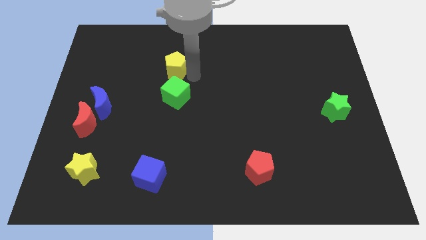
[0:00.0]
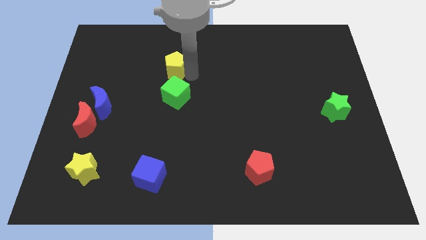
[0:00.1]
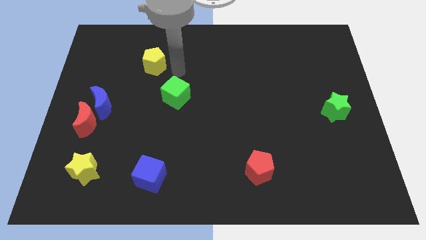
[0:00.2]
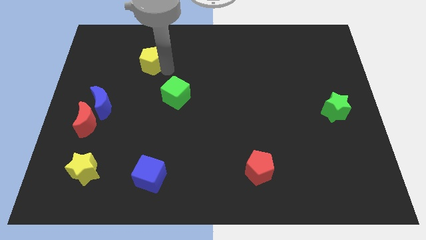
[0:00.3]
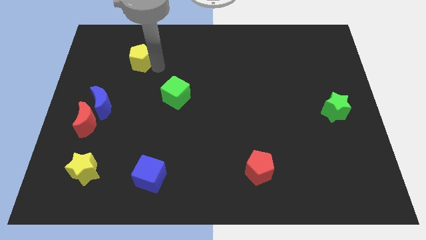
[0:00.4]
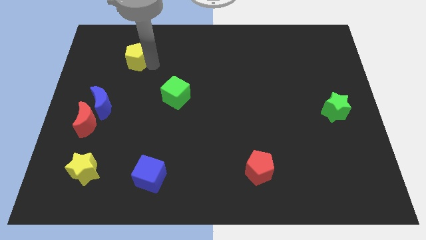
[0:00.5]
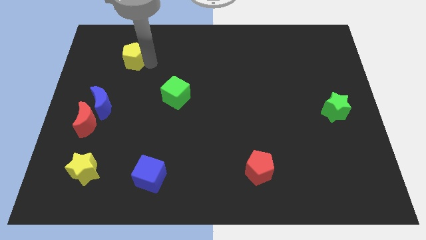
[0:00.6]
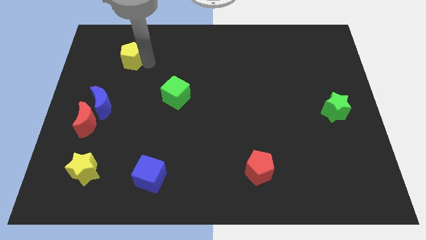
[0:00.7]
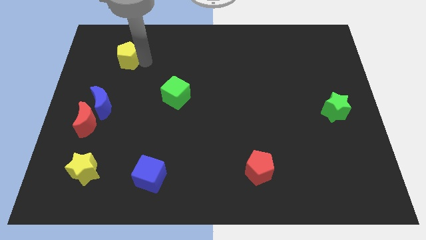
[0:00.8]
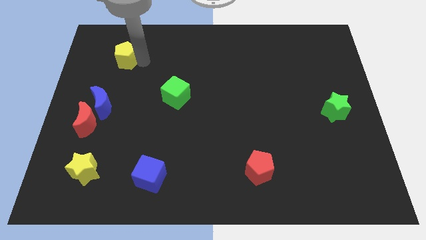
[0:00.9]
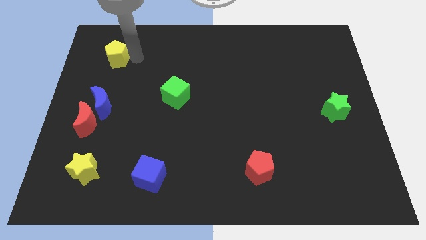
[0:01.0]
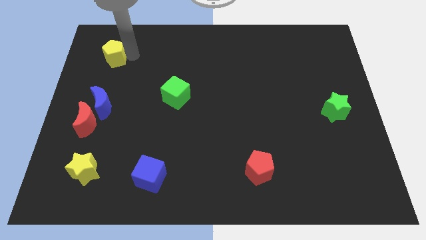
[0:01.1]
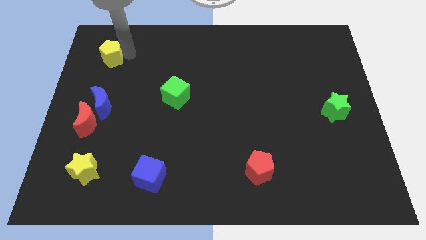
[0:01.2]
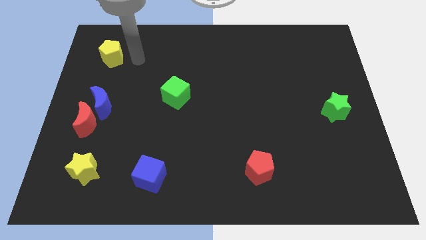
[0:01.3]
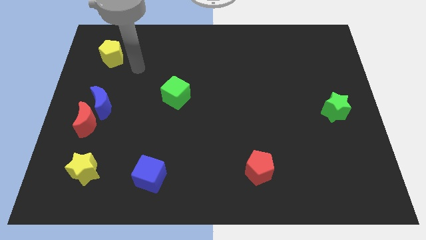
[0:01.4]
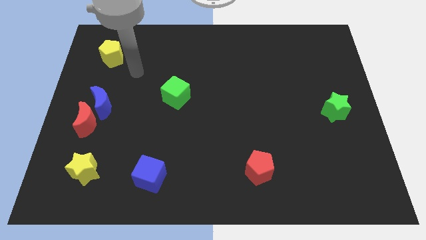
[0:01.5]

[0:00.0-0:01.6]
move the yellow pentagon vertically above the blue crescent

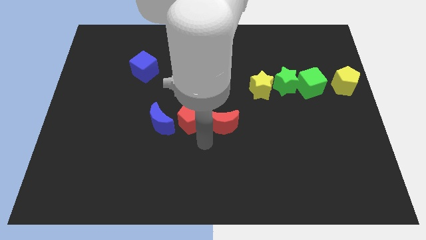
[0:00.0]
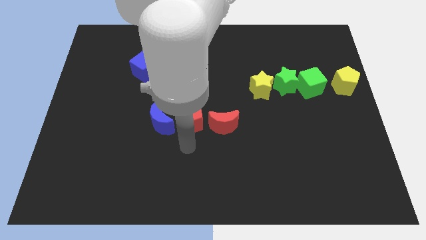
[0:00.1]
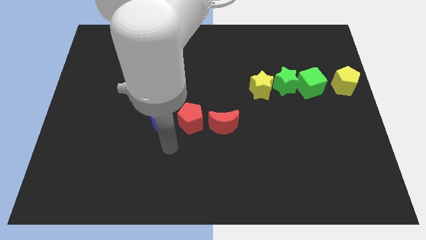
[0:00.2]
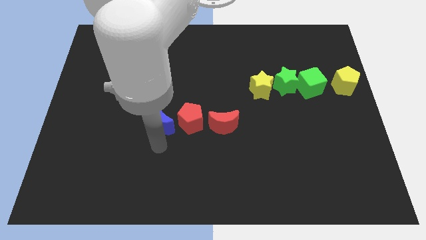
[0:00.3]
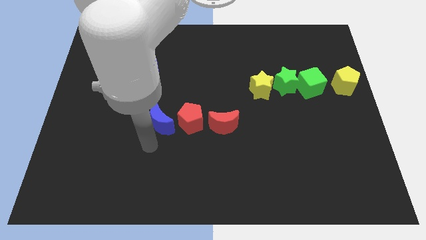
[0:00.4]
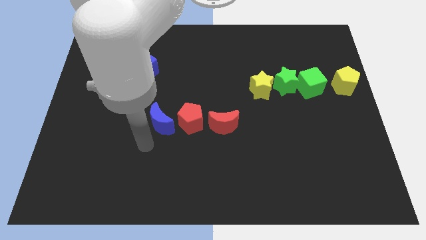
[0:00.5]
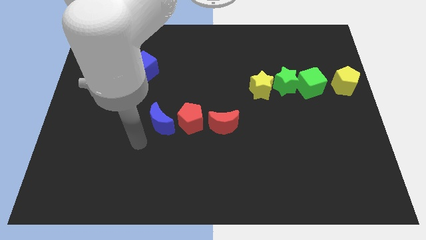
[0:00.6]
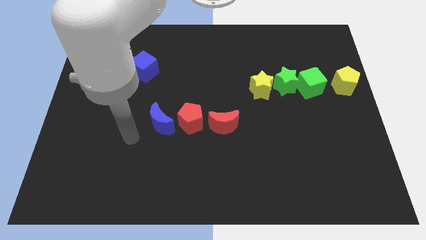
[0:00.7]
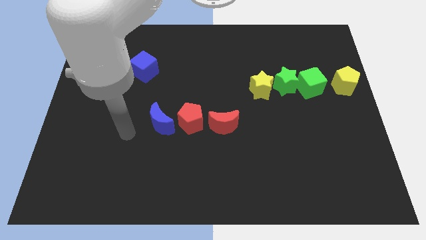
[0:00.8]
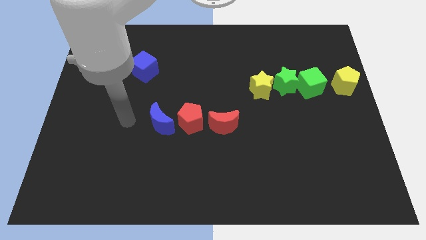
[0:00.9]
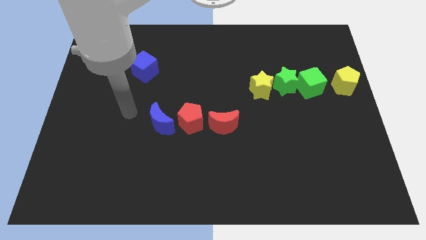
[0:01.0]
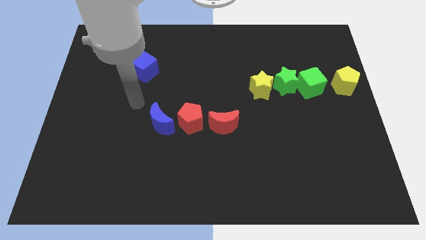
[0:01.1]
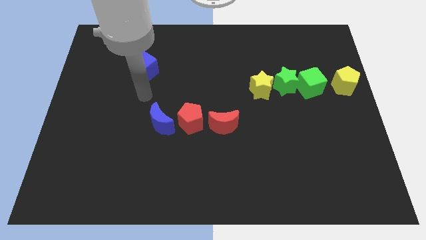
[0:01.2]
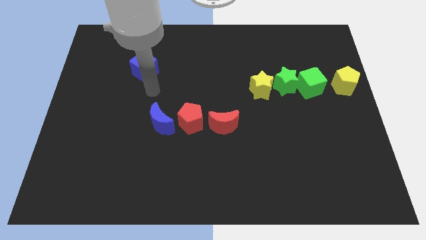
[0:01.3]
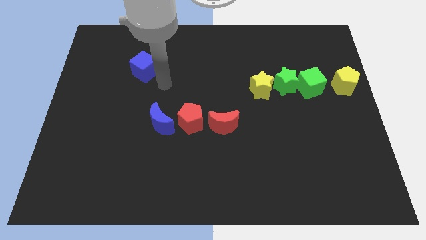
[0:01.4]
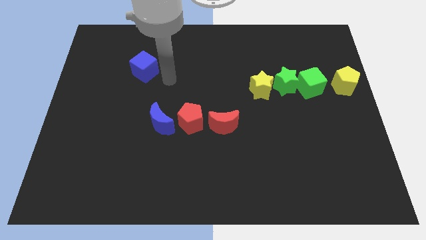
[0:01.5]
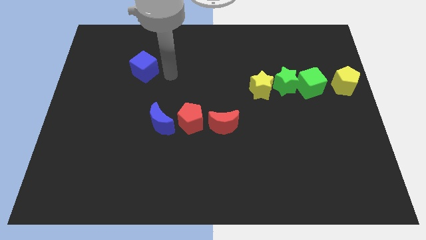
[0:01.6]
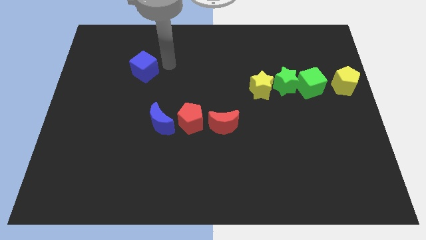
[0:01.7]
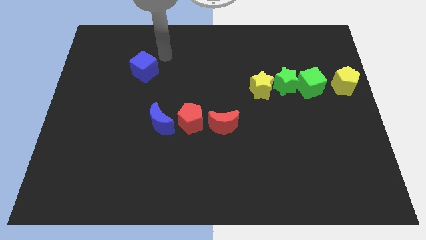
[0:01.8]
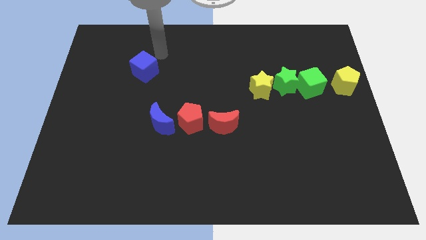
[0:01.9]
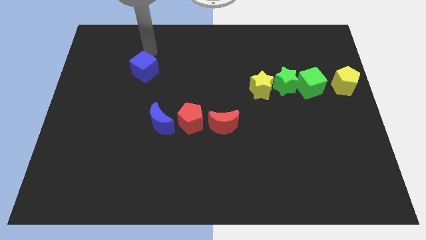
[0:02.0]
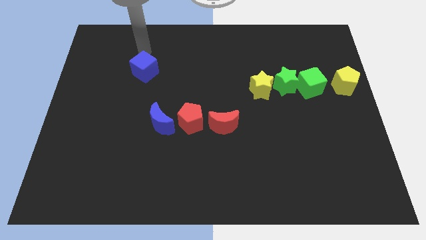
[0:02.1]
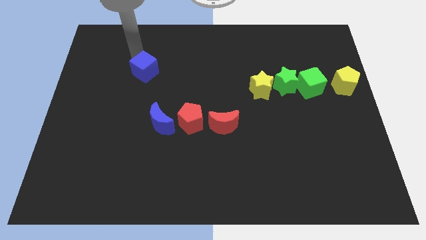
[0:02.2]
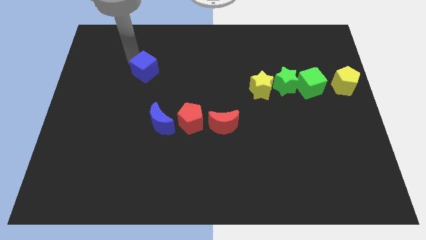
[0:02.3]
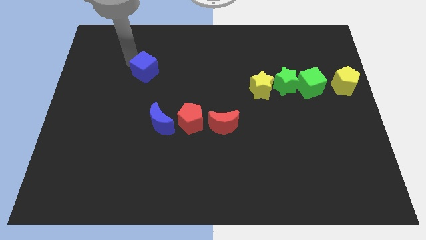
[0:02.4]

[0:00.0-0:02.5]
place the arm near the blue cube

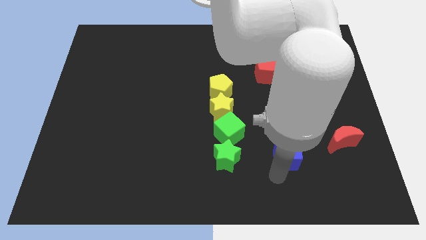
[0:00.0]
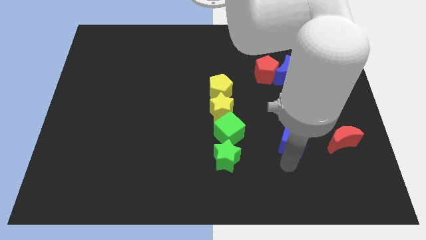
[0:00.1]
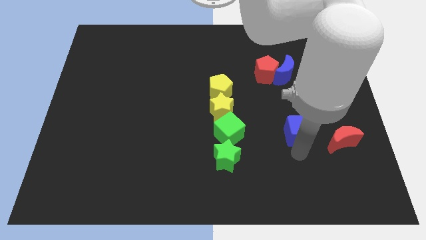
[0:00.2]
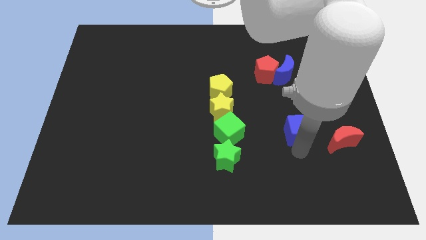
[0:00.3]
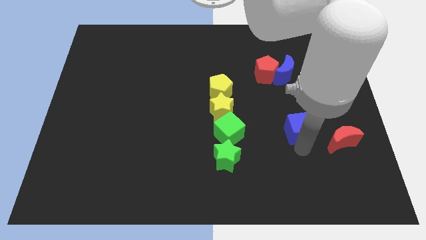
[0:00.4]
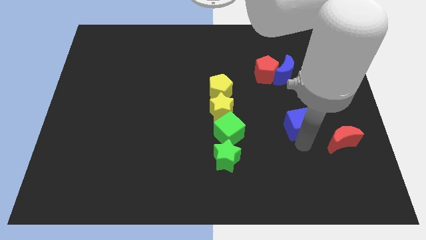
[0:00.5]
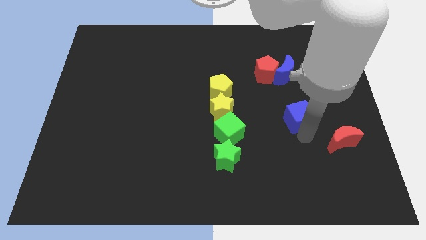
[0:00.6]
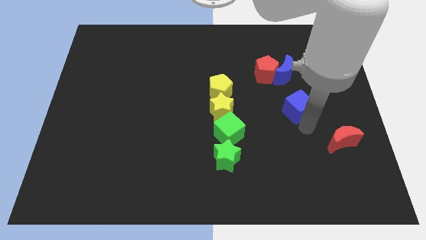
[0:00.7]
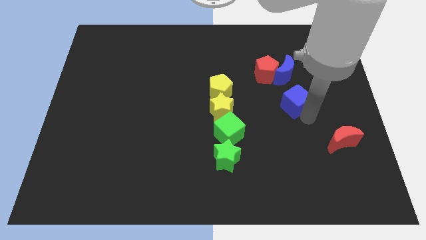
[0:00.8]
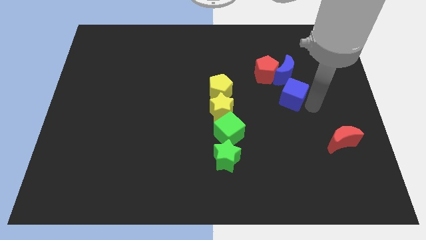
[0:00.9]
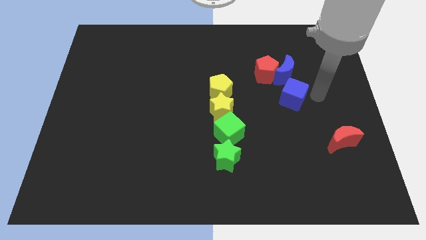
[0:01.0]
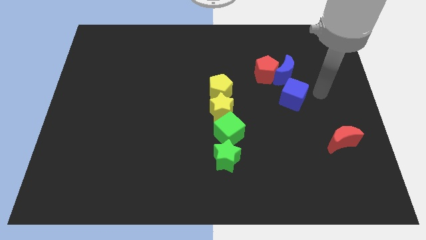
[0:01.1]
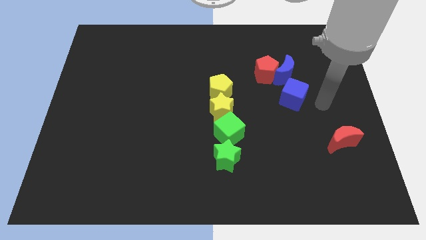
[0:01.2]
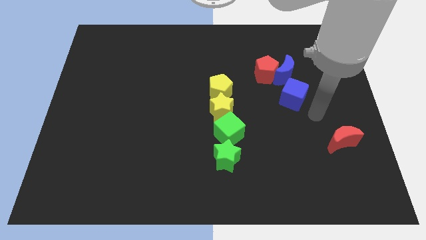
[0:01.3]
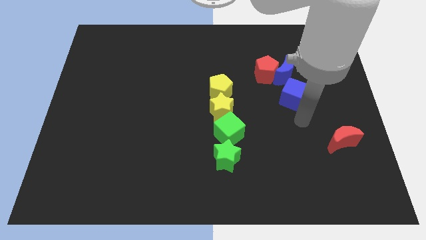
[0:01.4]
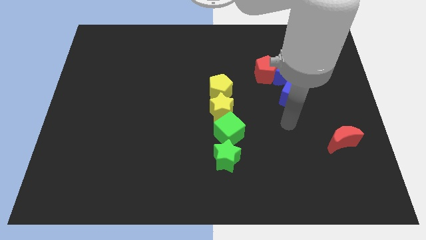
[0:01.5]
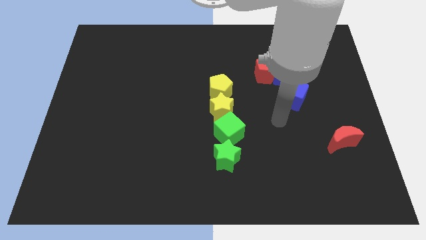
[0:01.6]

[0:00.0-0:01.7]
move the blue cube bottom to the blue crescent

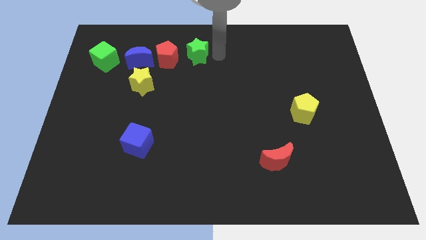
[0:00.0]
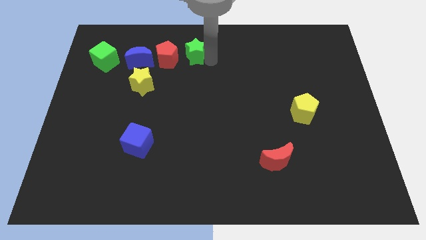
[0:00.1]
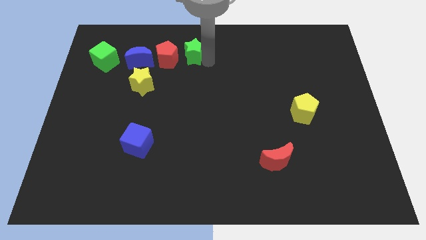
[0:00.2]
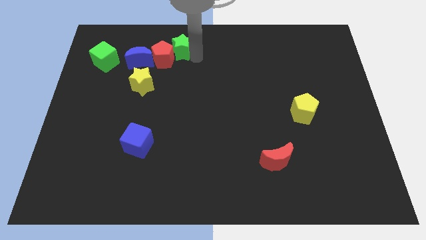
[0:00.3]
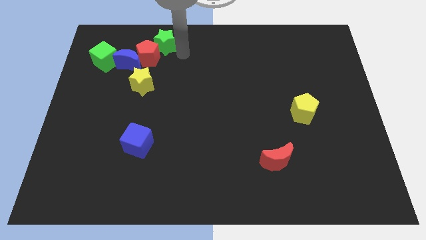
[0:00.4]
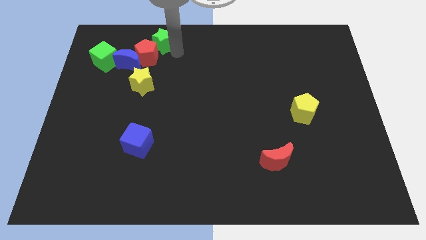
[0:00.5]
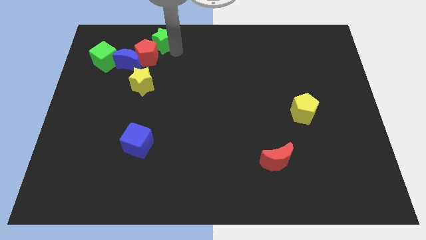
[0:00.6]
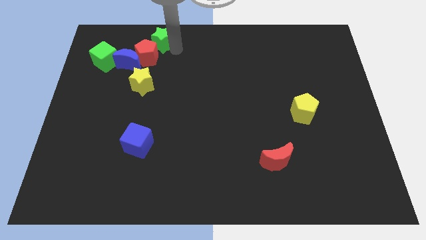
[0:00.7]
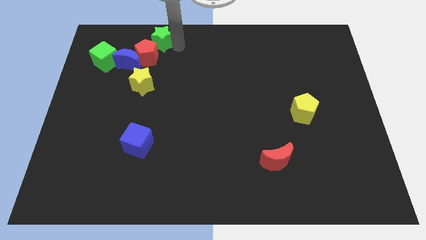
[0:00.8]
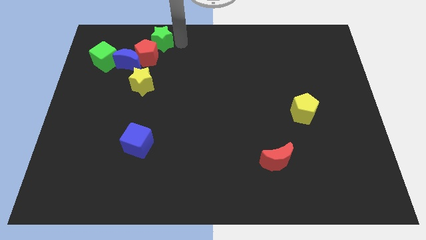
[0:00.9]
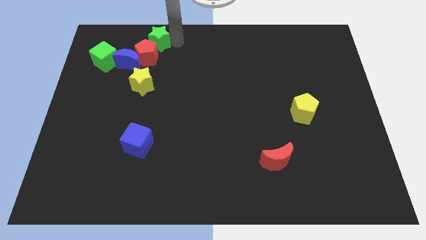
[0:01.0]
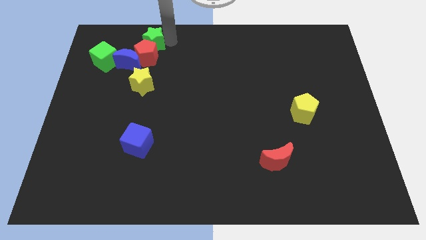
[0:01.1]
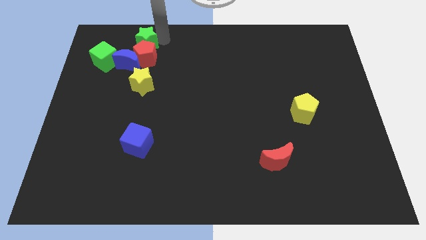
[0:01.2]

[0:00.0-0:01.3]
slide the green star vertically above the red pentagon

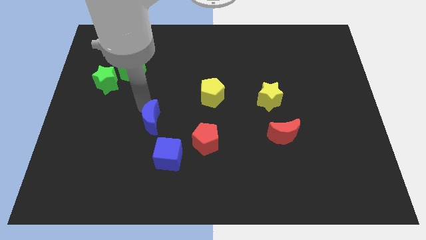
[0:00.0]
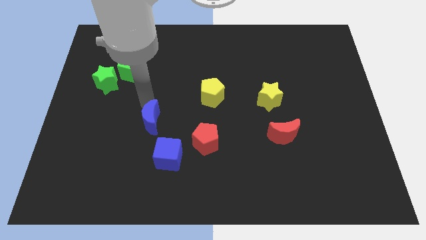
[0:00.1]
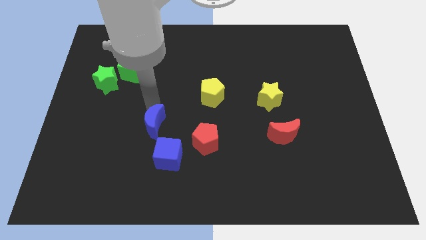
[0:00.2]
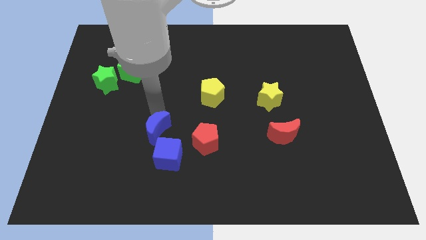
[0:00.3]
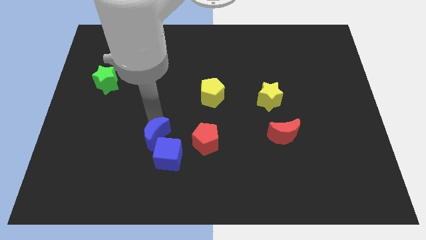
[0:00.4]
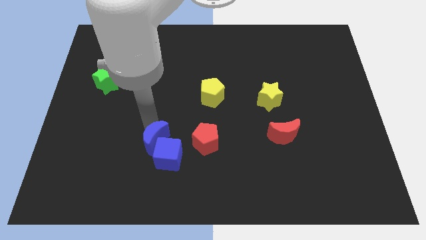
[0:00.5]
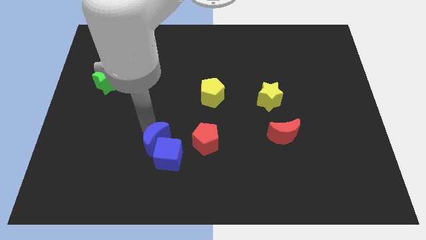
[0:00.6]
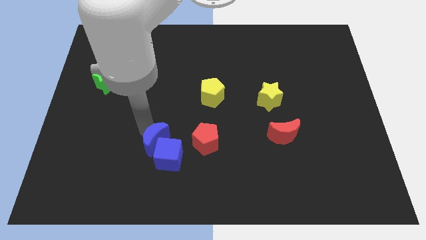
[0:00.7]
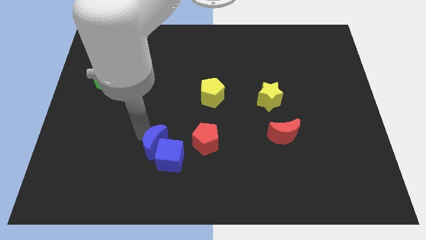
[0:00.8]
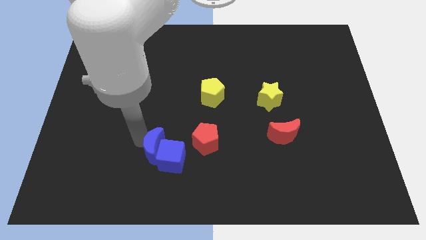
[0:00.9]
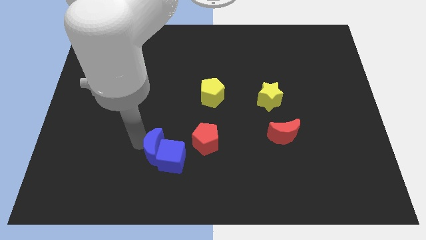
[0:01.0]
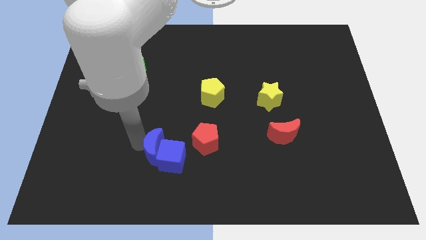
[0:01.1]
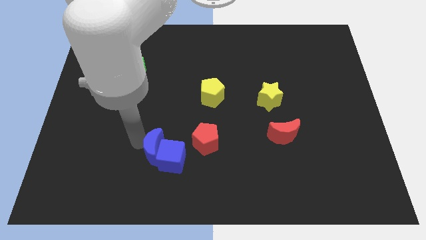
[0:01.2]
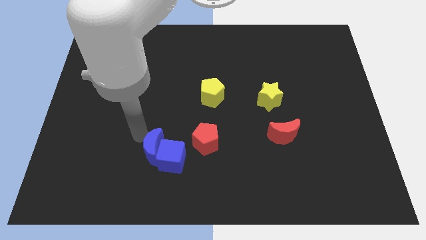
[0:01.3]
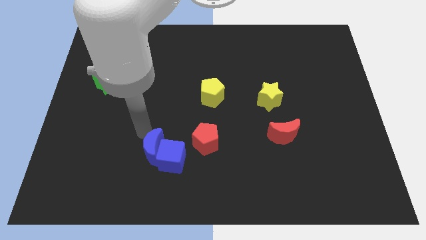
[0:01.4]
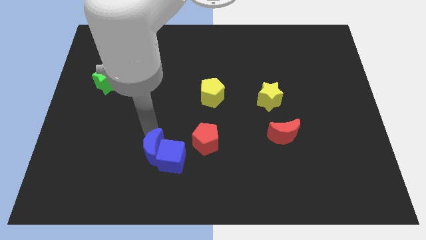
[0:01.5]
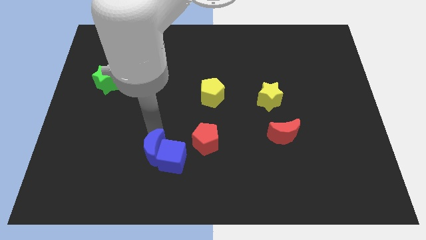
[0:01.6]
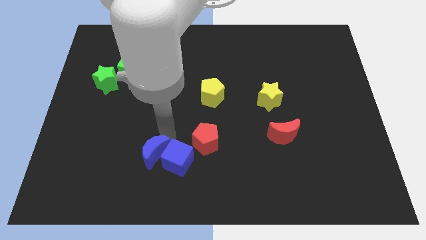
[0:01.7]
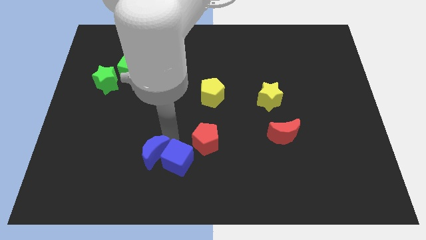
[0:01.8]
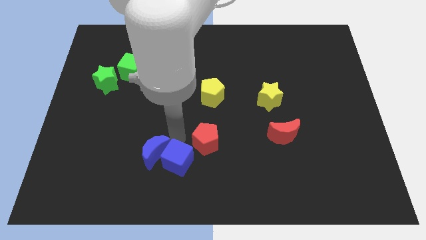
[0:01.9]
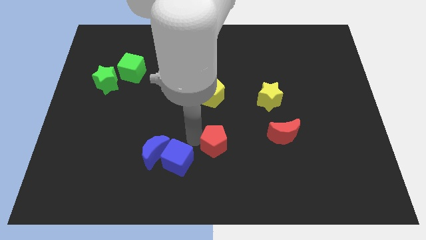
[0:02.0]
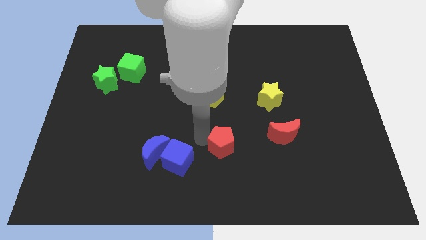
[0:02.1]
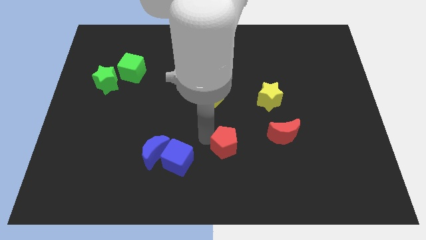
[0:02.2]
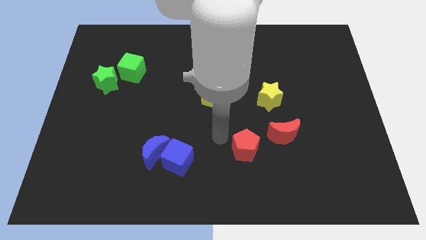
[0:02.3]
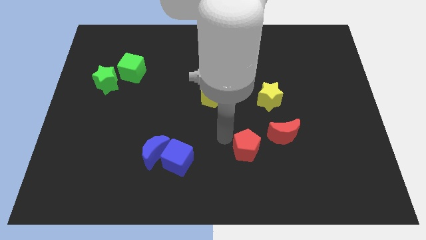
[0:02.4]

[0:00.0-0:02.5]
place the red pentagon diagonally bottom right to the yellow pentagon
